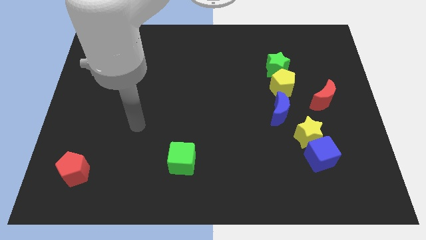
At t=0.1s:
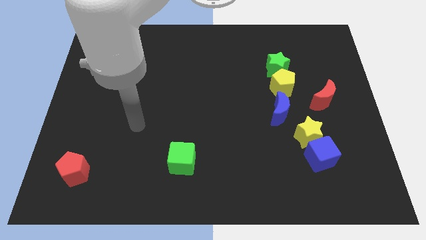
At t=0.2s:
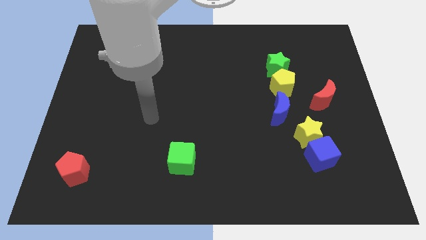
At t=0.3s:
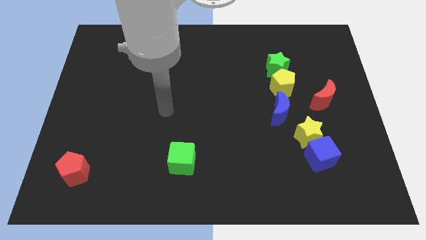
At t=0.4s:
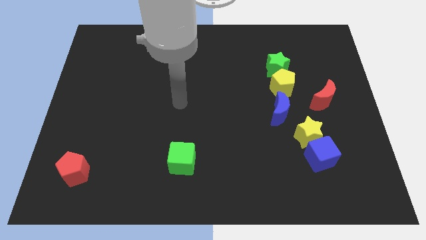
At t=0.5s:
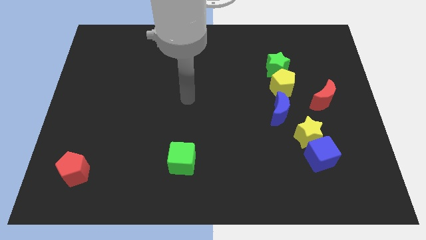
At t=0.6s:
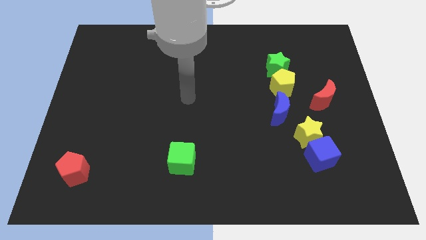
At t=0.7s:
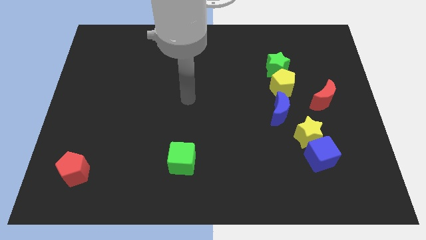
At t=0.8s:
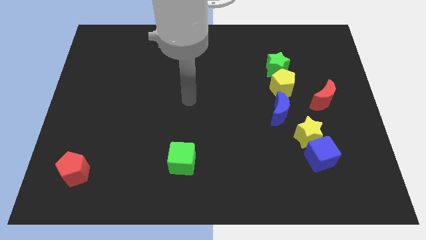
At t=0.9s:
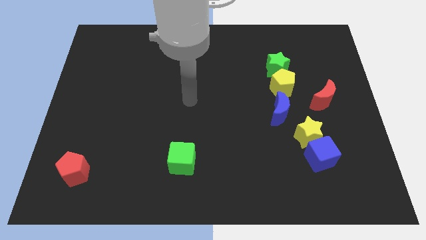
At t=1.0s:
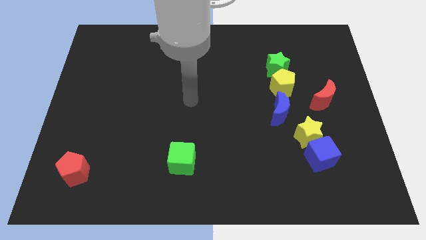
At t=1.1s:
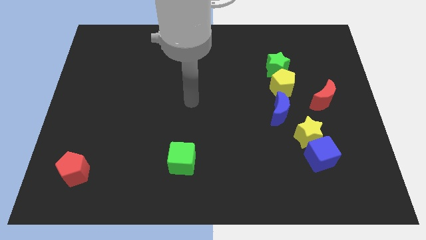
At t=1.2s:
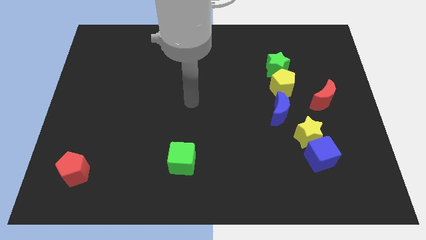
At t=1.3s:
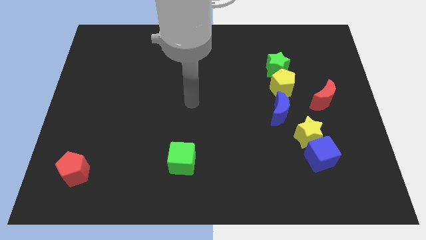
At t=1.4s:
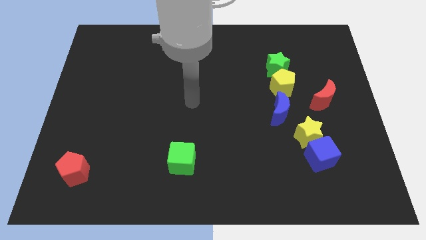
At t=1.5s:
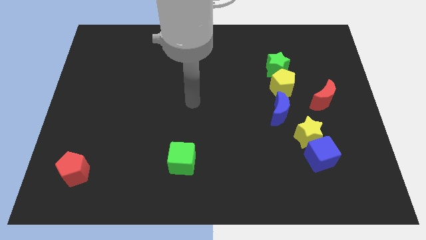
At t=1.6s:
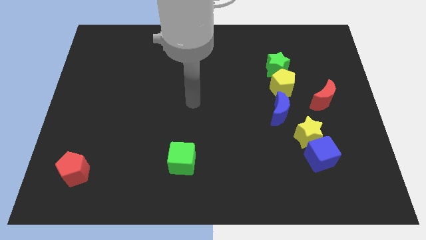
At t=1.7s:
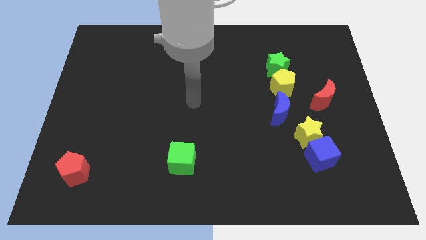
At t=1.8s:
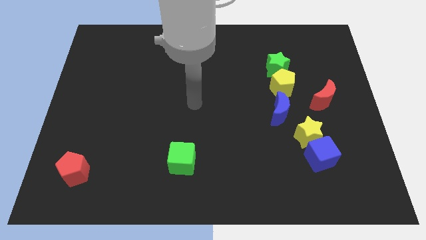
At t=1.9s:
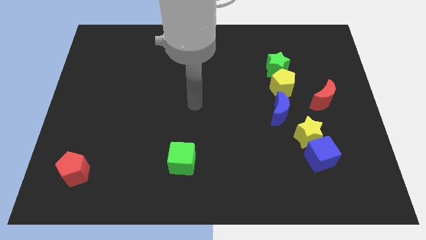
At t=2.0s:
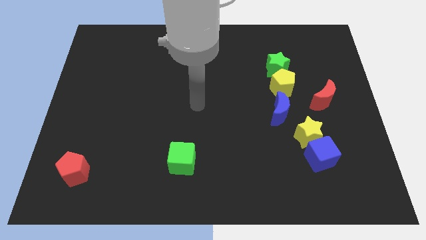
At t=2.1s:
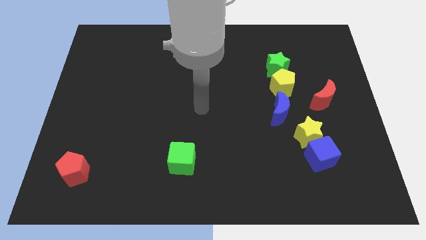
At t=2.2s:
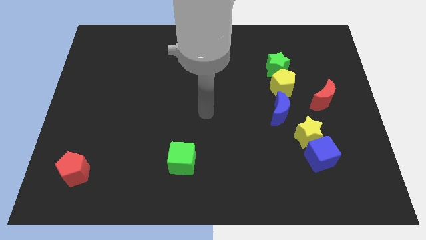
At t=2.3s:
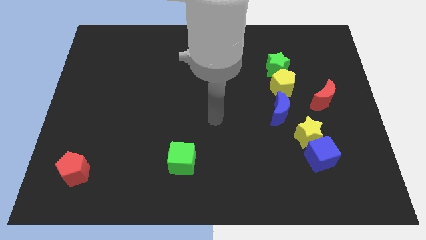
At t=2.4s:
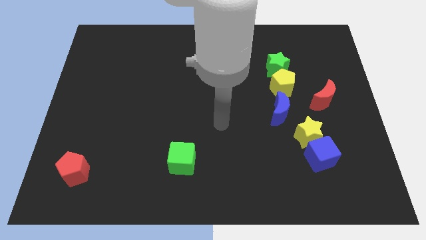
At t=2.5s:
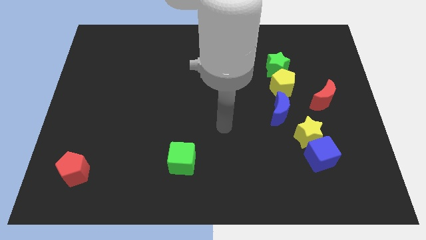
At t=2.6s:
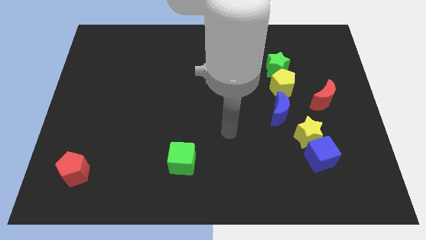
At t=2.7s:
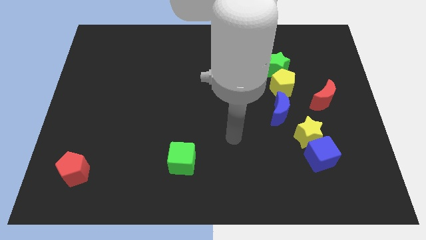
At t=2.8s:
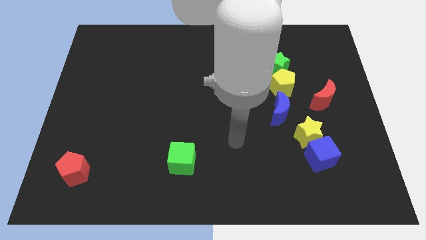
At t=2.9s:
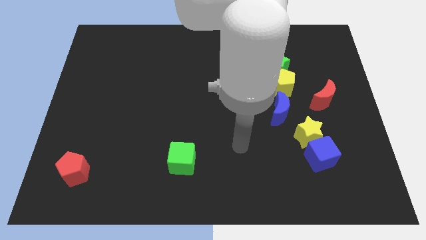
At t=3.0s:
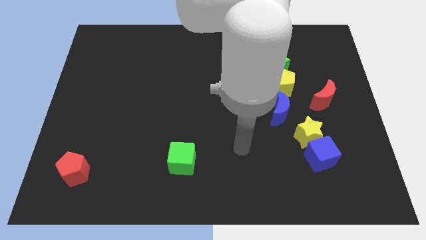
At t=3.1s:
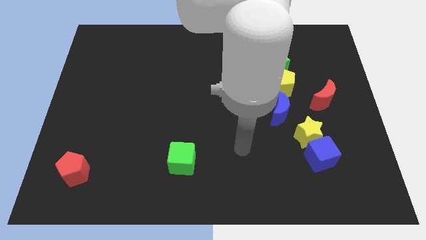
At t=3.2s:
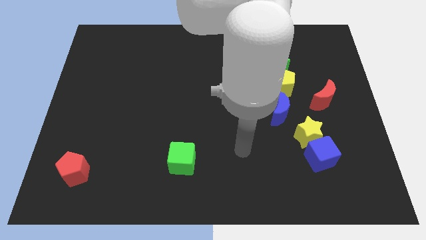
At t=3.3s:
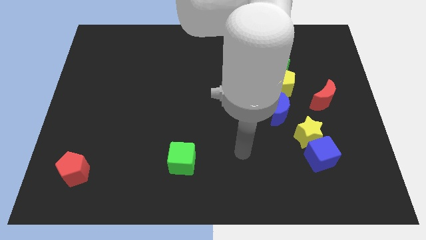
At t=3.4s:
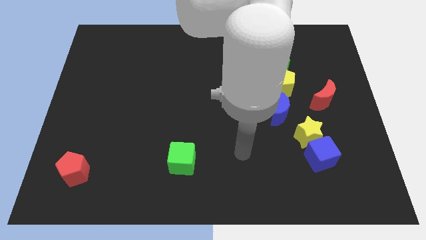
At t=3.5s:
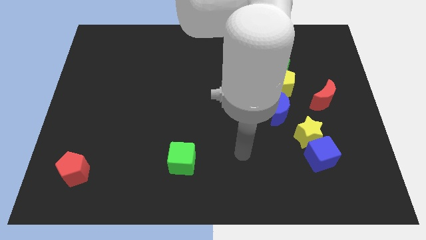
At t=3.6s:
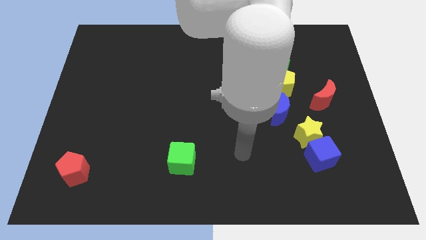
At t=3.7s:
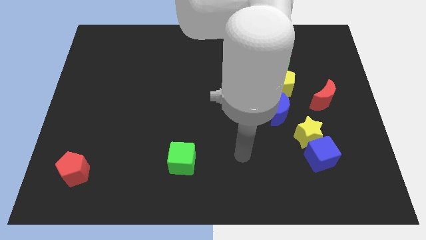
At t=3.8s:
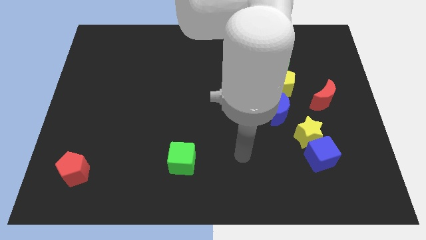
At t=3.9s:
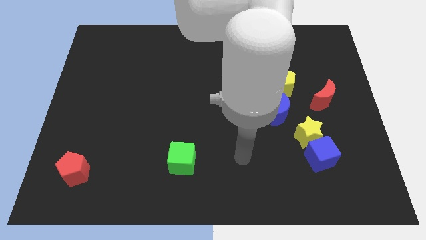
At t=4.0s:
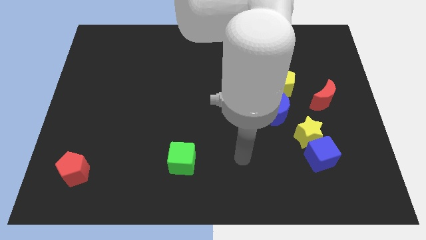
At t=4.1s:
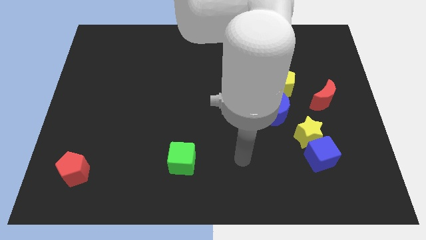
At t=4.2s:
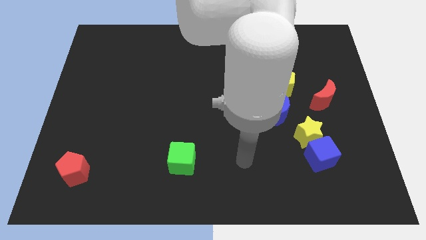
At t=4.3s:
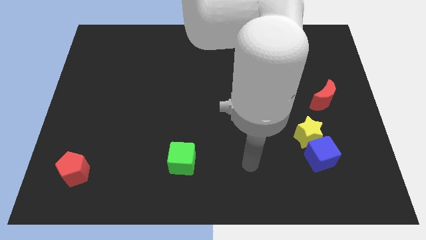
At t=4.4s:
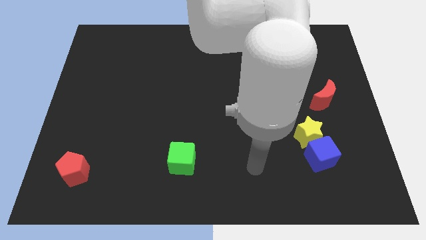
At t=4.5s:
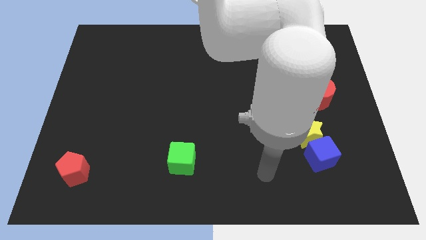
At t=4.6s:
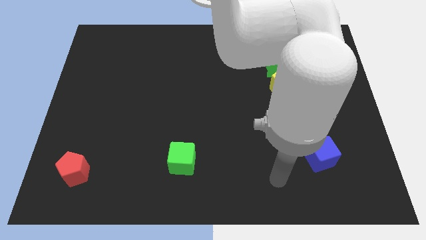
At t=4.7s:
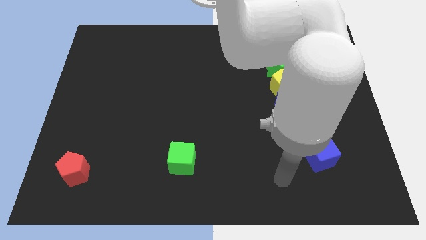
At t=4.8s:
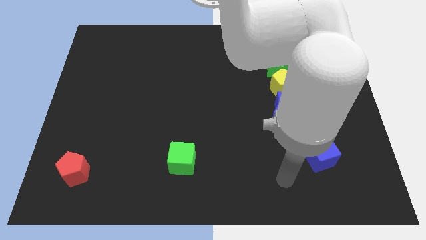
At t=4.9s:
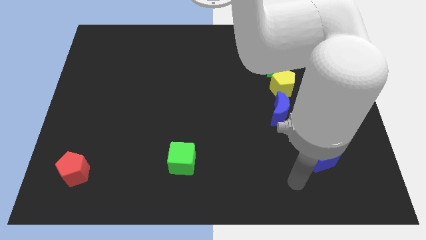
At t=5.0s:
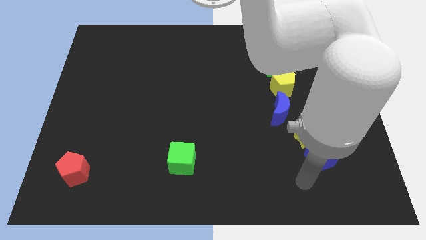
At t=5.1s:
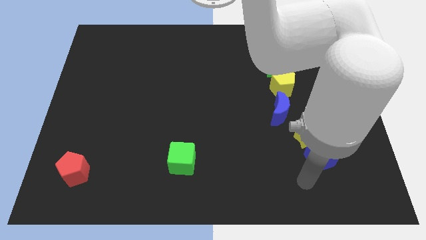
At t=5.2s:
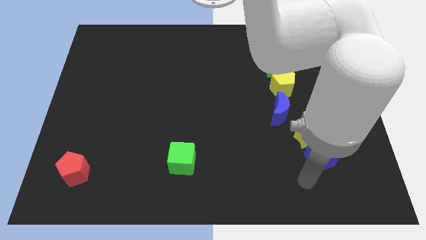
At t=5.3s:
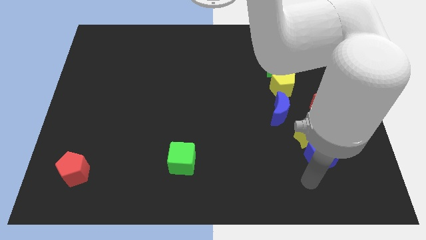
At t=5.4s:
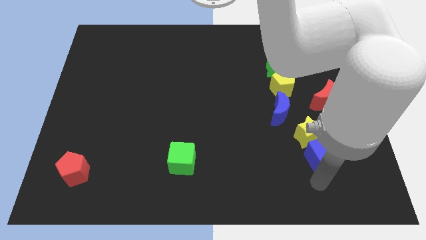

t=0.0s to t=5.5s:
move your arm below the blue cube

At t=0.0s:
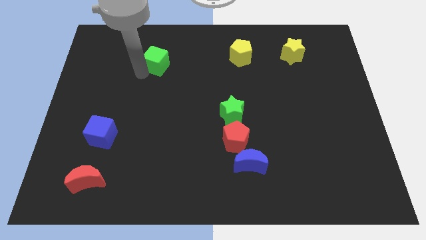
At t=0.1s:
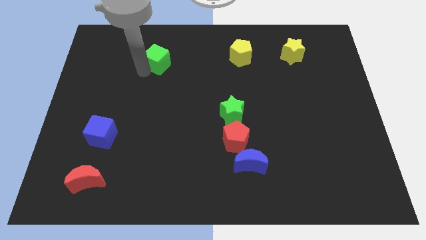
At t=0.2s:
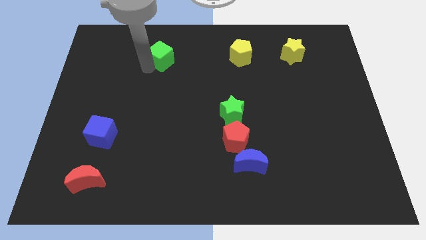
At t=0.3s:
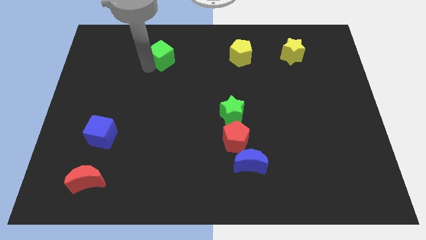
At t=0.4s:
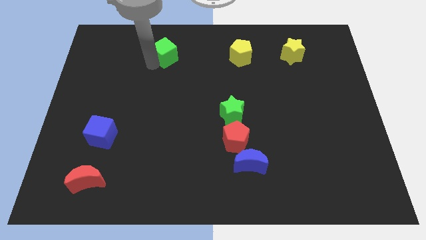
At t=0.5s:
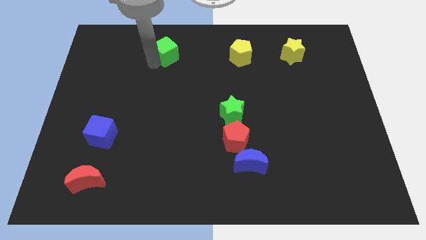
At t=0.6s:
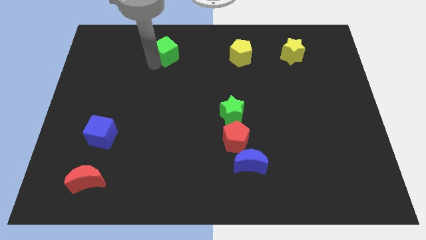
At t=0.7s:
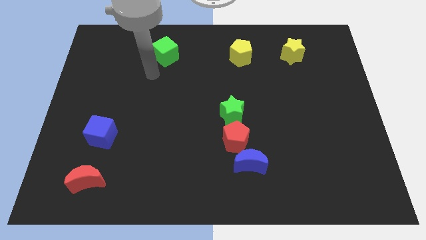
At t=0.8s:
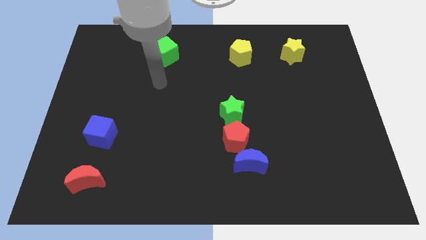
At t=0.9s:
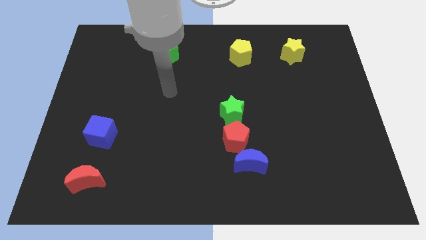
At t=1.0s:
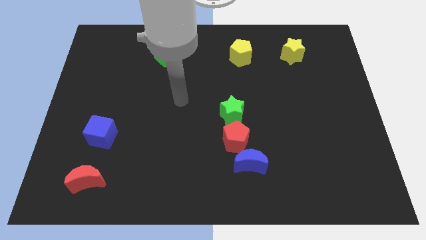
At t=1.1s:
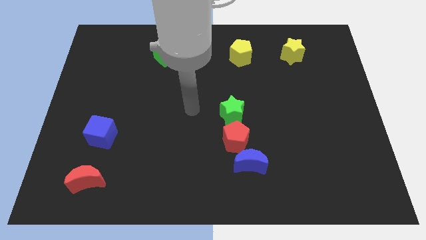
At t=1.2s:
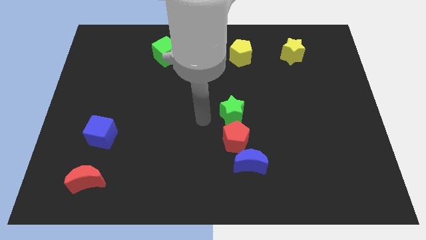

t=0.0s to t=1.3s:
move the green cube slightly towards the top

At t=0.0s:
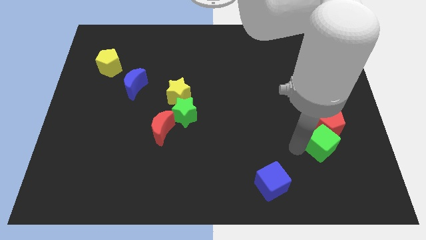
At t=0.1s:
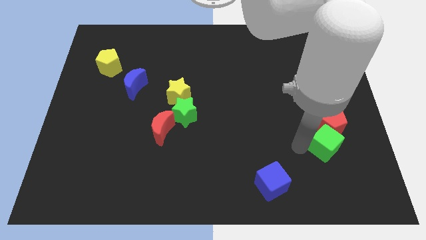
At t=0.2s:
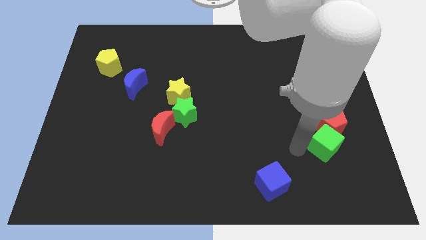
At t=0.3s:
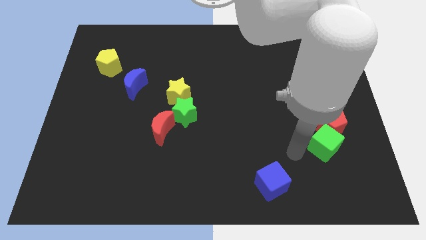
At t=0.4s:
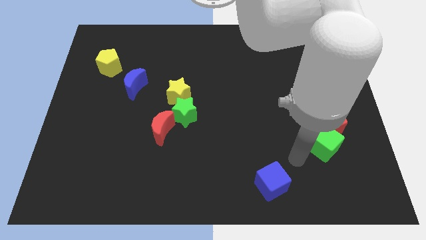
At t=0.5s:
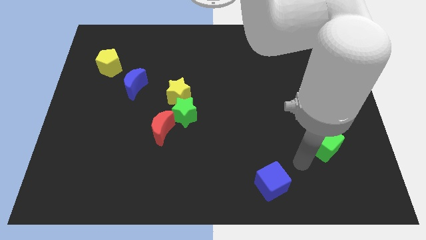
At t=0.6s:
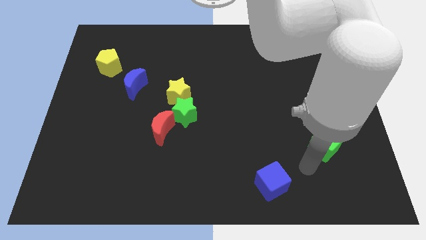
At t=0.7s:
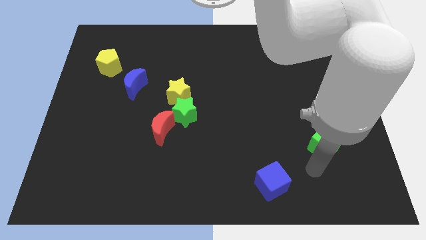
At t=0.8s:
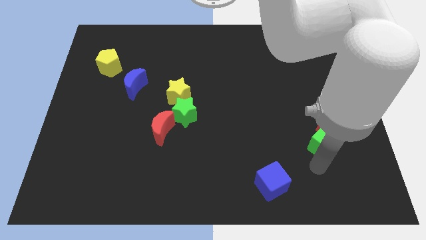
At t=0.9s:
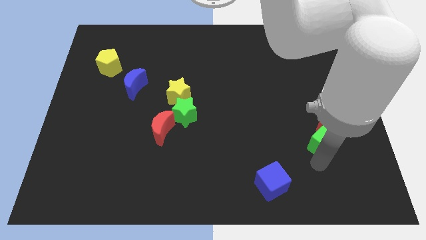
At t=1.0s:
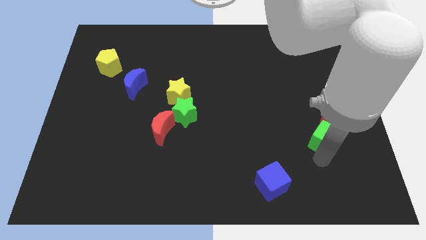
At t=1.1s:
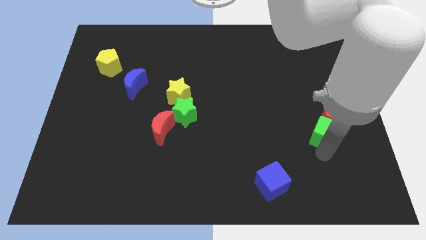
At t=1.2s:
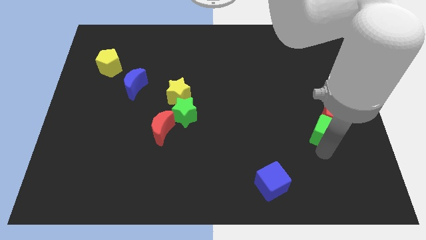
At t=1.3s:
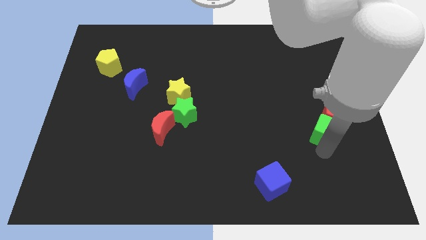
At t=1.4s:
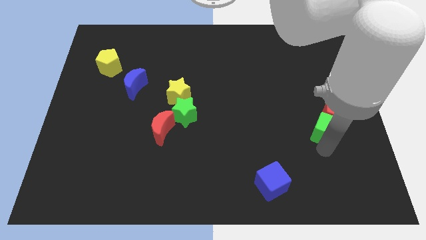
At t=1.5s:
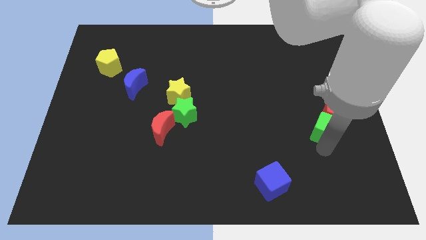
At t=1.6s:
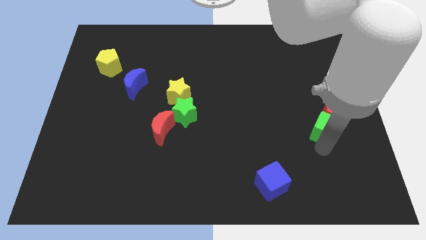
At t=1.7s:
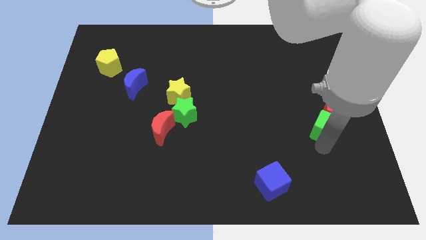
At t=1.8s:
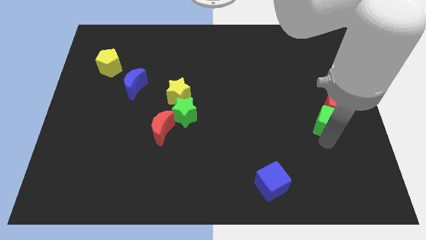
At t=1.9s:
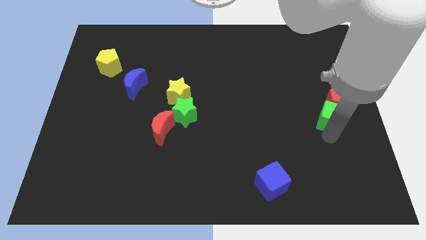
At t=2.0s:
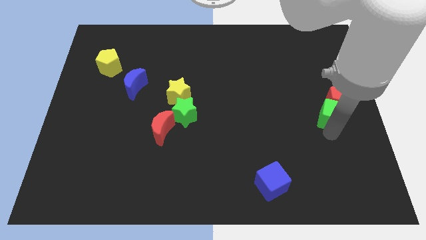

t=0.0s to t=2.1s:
push the green cube and red pentagon slightly upwards
